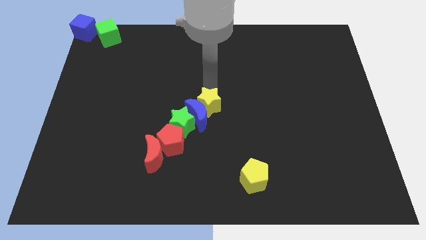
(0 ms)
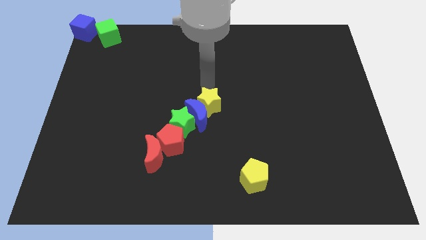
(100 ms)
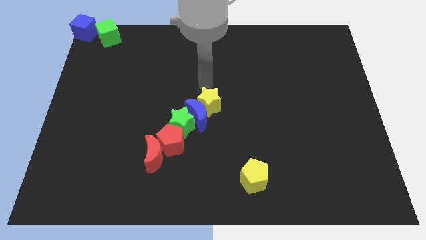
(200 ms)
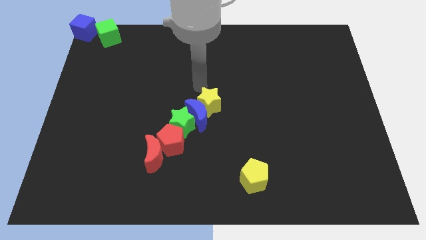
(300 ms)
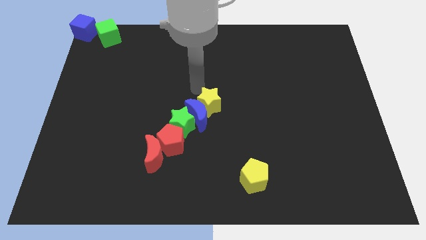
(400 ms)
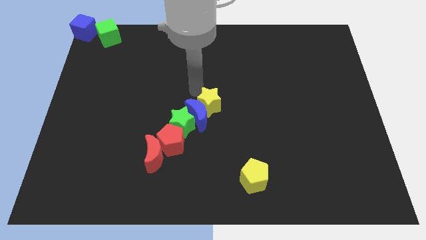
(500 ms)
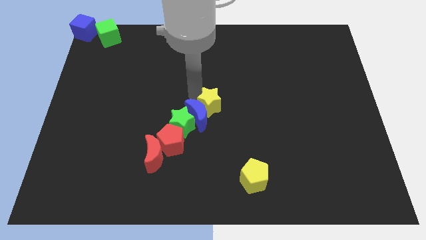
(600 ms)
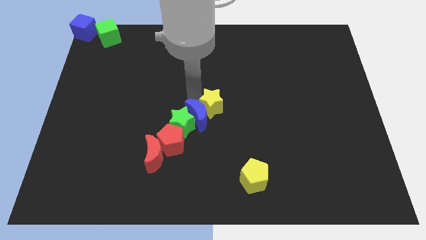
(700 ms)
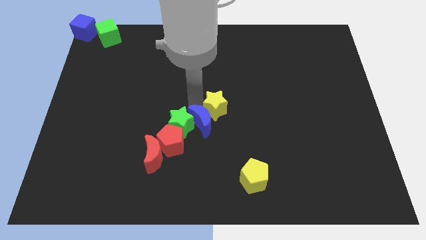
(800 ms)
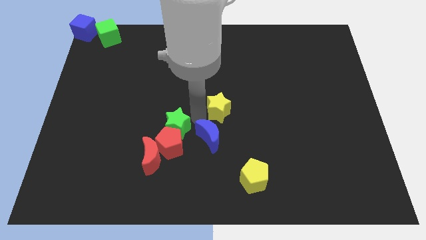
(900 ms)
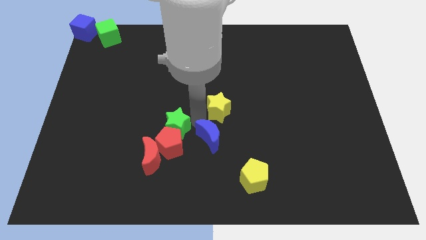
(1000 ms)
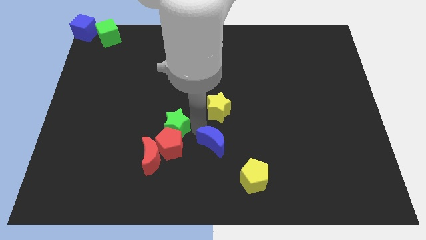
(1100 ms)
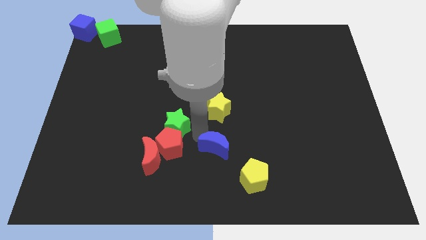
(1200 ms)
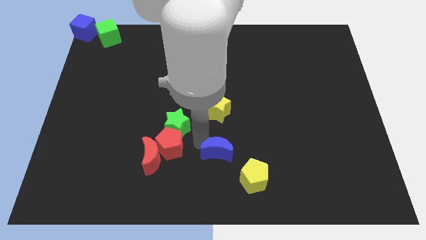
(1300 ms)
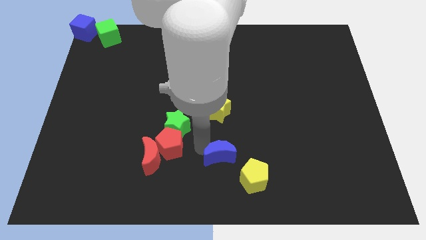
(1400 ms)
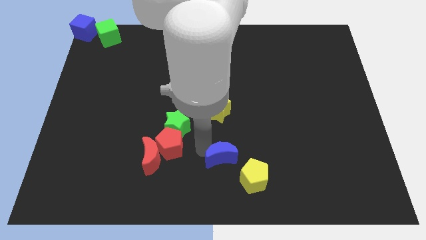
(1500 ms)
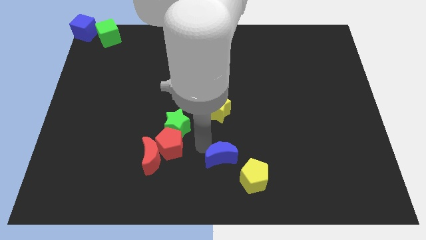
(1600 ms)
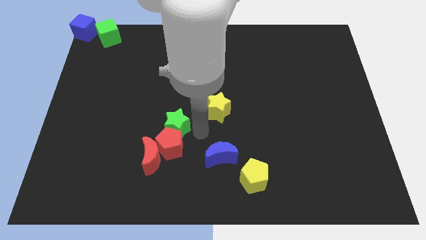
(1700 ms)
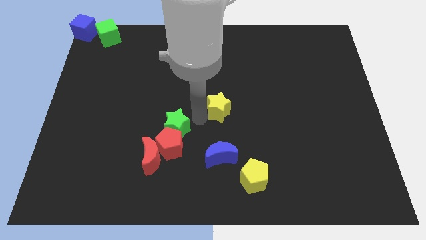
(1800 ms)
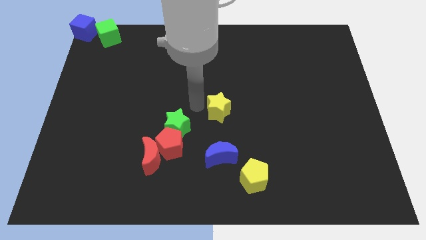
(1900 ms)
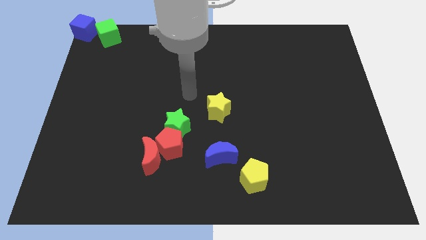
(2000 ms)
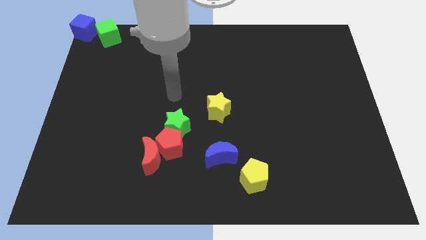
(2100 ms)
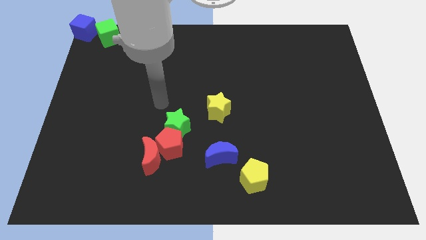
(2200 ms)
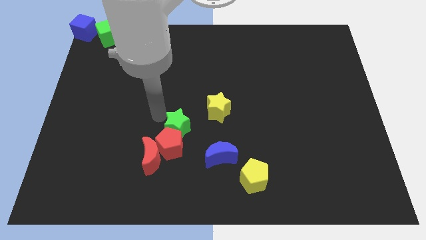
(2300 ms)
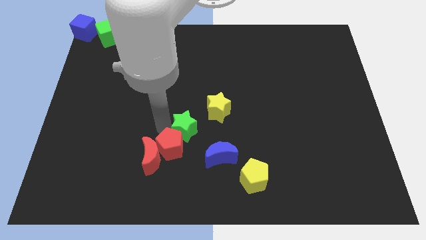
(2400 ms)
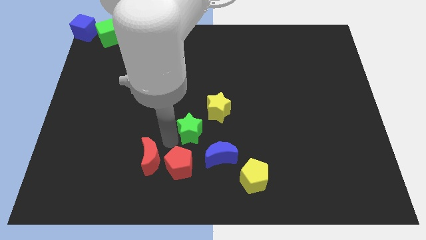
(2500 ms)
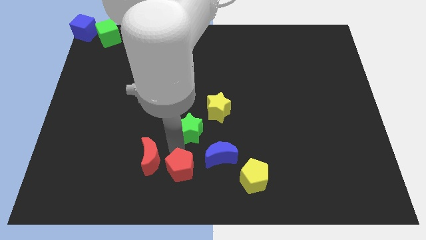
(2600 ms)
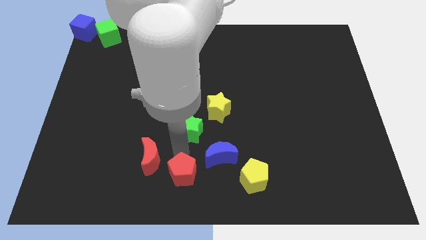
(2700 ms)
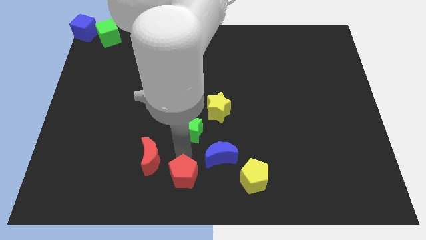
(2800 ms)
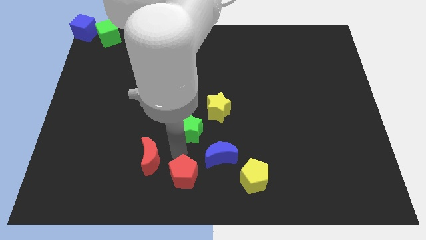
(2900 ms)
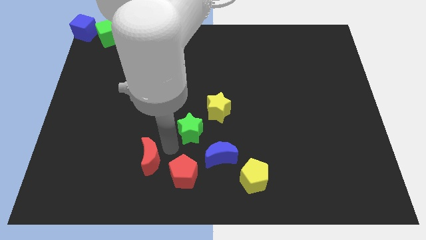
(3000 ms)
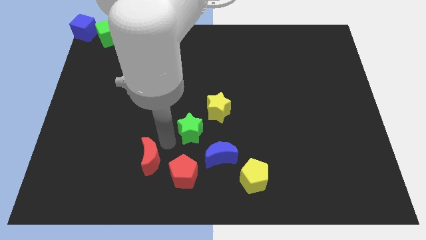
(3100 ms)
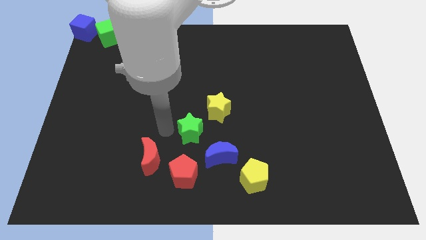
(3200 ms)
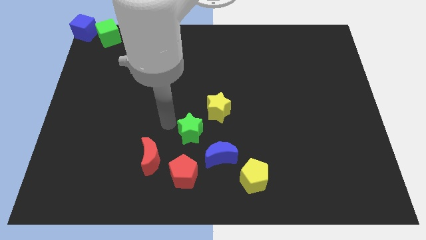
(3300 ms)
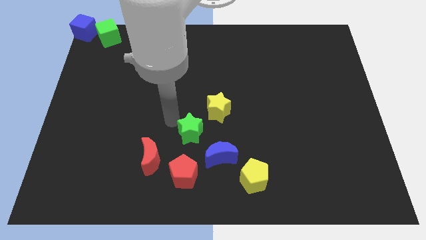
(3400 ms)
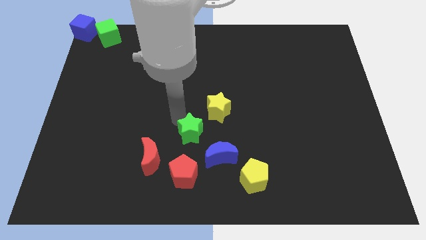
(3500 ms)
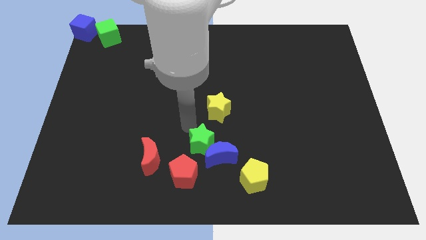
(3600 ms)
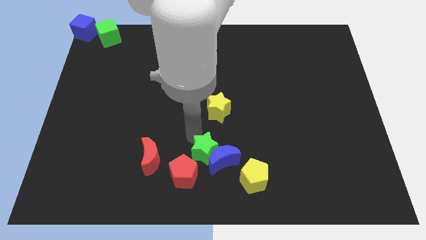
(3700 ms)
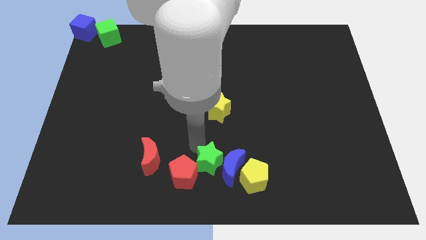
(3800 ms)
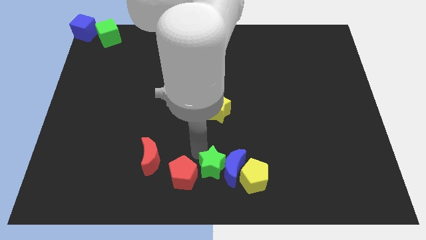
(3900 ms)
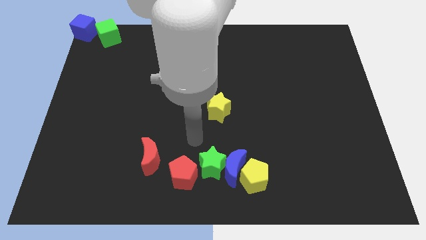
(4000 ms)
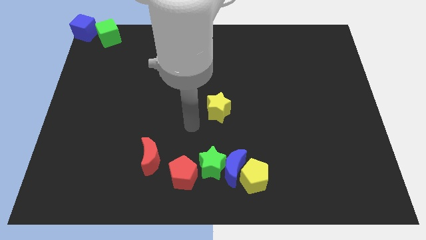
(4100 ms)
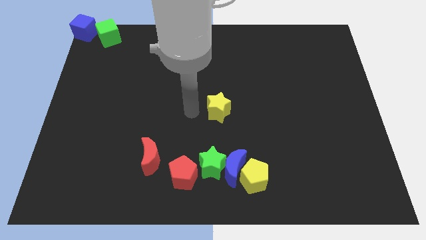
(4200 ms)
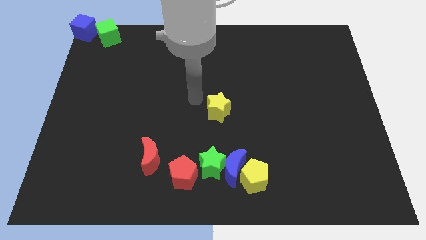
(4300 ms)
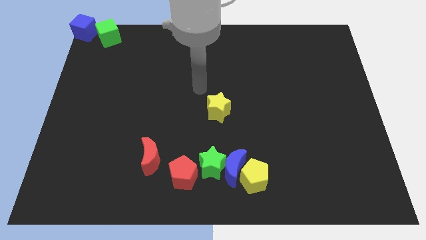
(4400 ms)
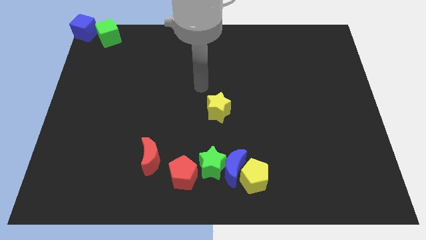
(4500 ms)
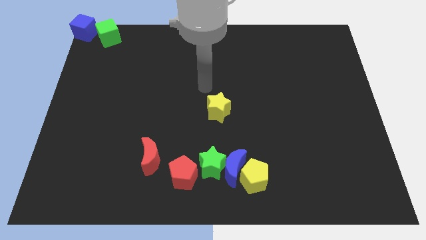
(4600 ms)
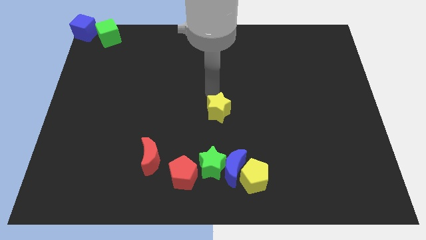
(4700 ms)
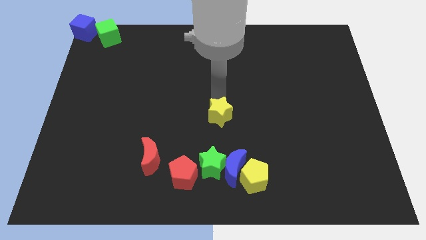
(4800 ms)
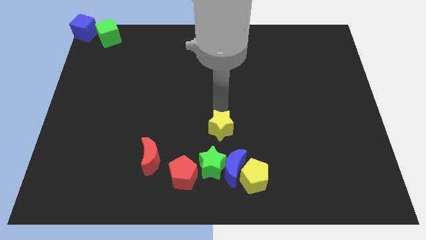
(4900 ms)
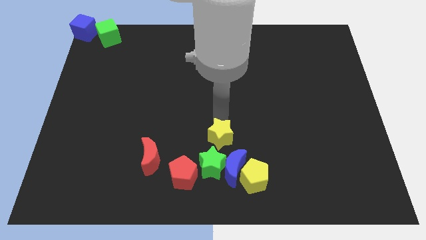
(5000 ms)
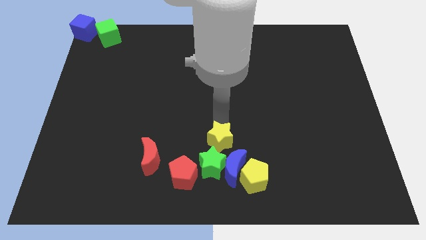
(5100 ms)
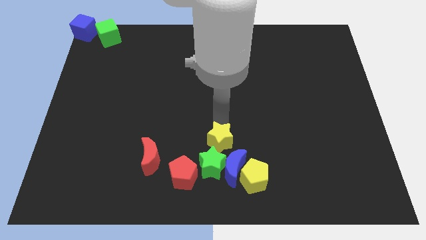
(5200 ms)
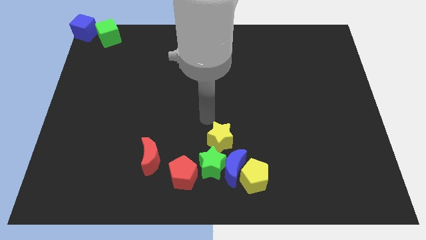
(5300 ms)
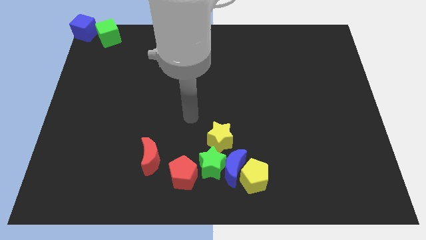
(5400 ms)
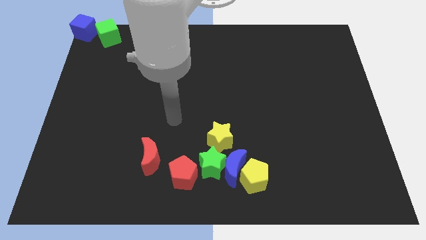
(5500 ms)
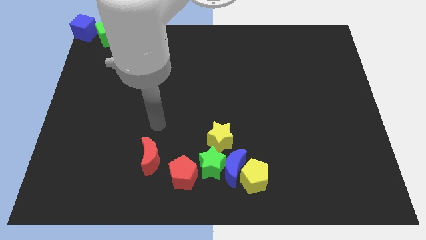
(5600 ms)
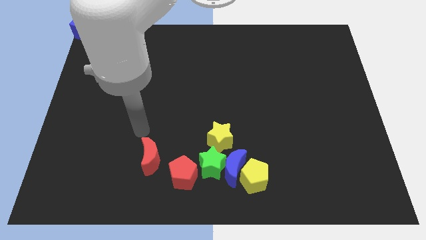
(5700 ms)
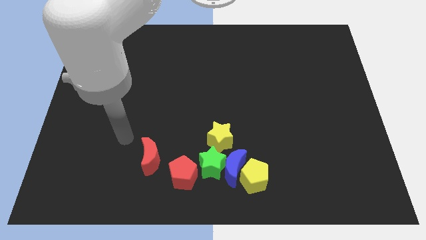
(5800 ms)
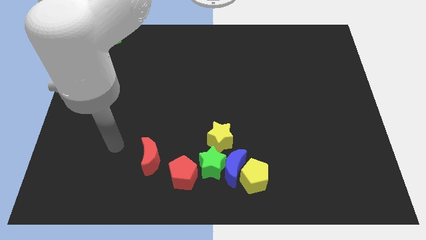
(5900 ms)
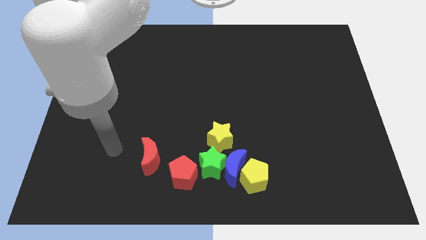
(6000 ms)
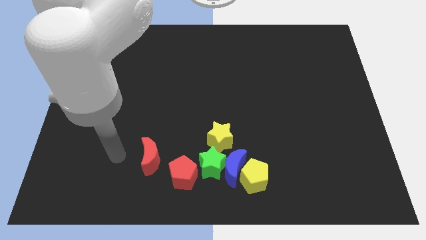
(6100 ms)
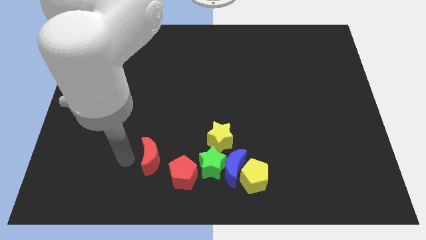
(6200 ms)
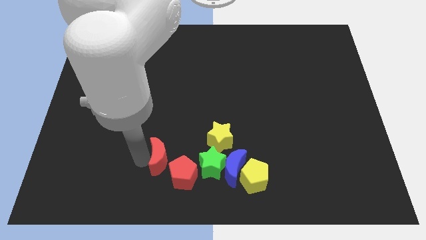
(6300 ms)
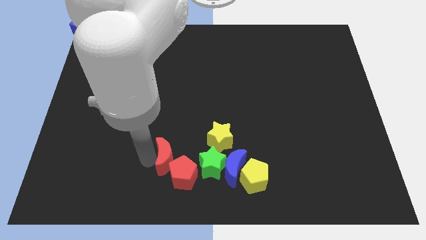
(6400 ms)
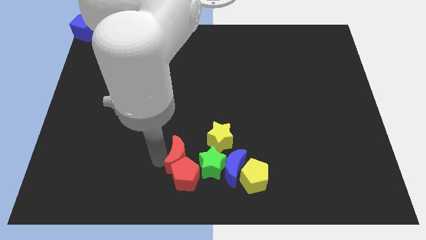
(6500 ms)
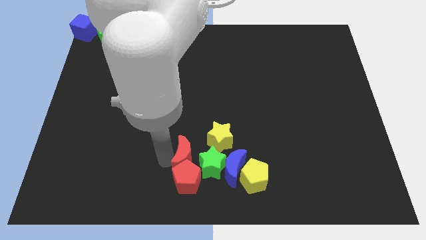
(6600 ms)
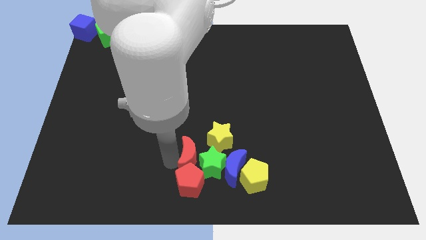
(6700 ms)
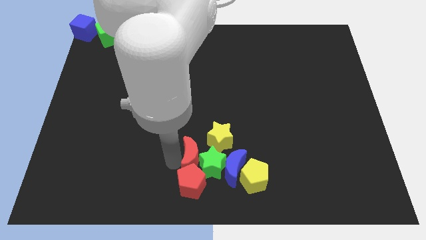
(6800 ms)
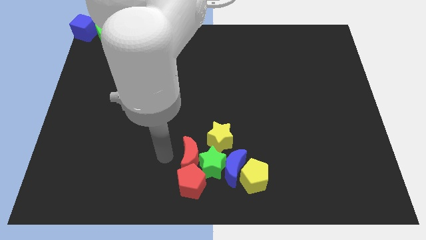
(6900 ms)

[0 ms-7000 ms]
group up all the blocks at the bottom side of the table except the green cube and blue cube

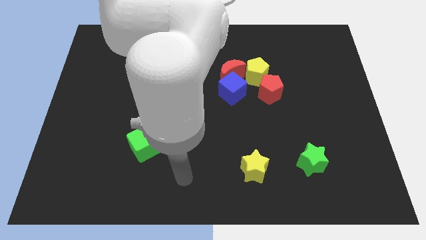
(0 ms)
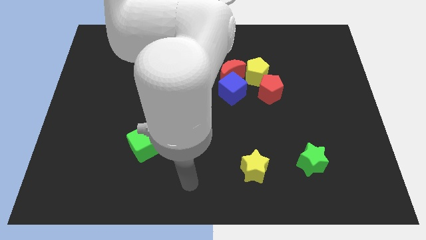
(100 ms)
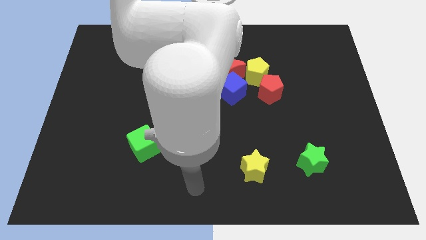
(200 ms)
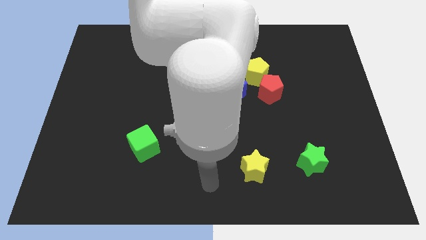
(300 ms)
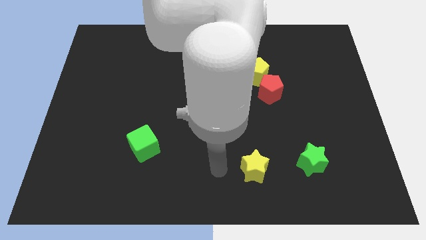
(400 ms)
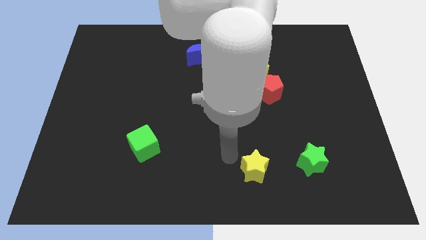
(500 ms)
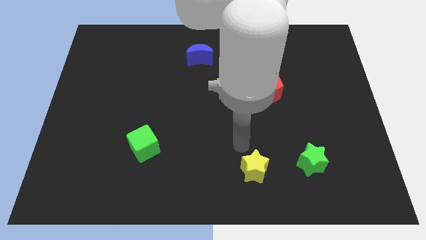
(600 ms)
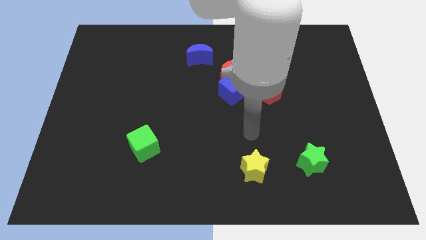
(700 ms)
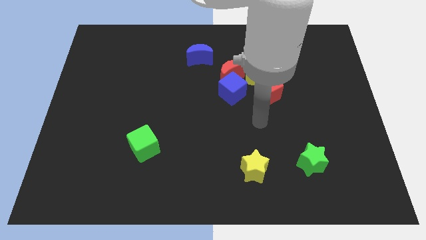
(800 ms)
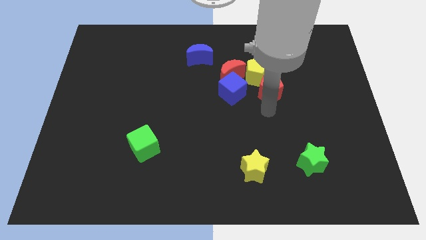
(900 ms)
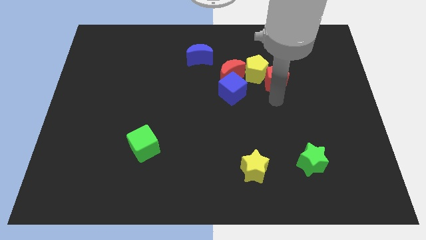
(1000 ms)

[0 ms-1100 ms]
slightly push the pentagons towards the top side

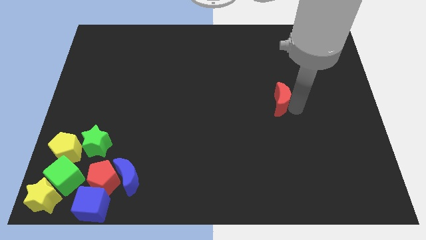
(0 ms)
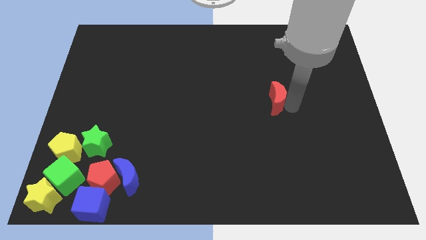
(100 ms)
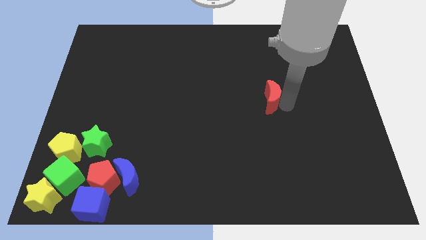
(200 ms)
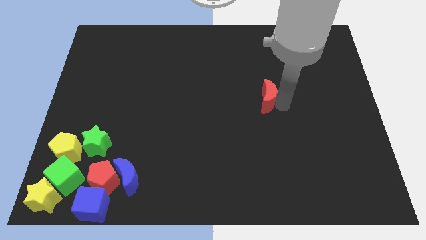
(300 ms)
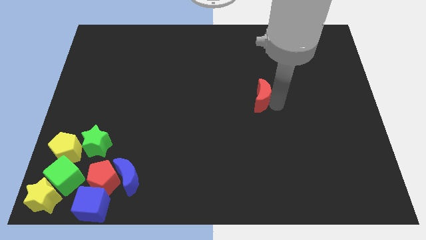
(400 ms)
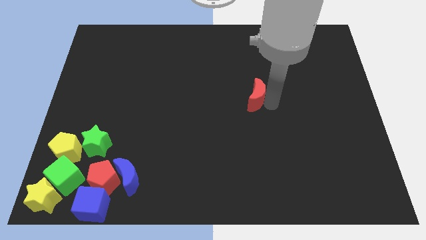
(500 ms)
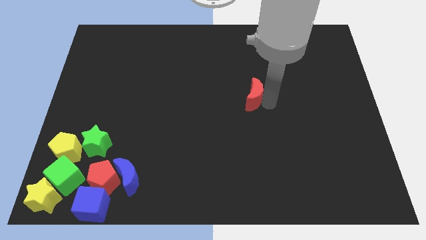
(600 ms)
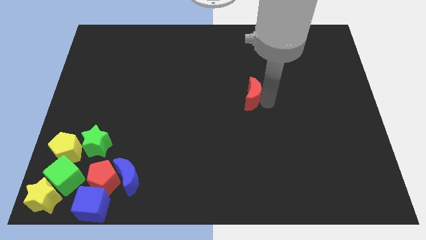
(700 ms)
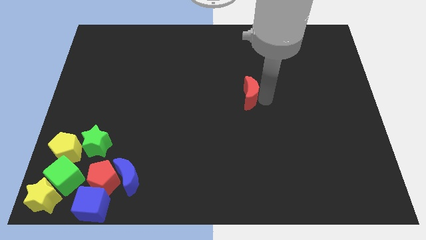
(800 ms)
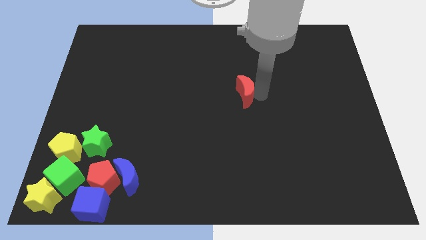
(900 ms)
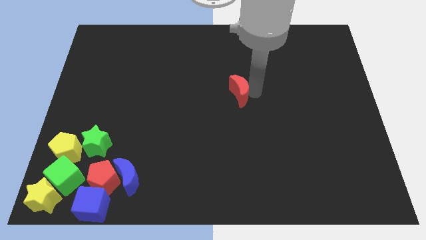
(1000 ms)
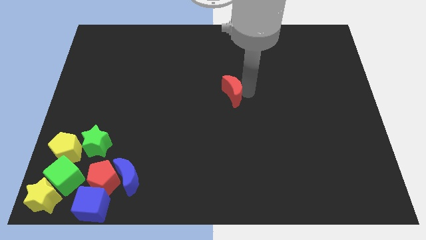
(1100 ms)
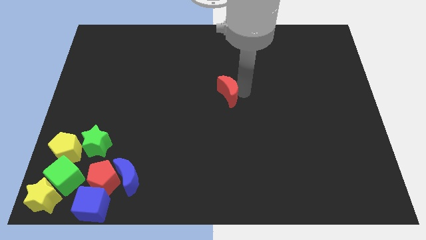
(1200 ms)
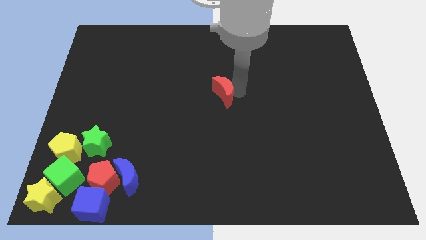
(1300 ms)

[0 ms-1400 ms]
move the red crescent to the center of the board
